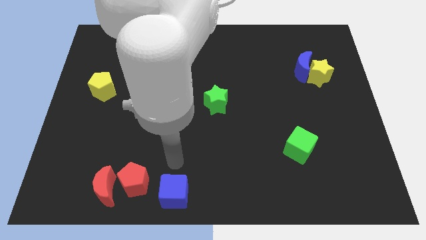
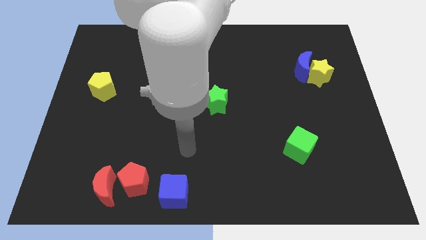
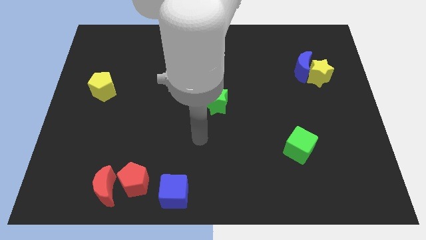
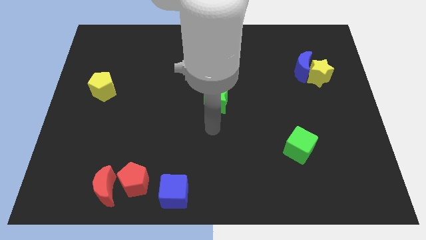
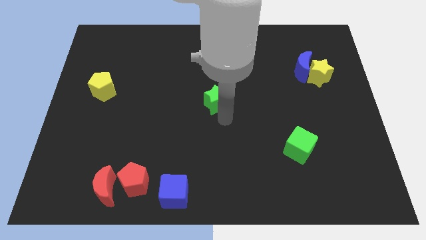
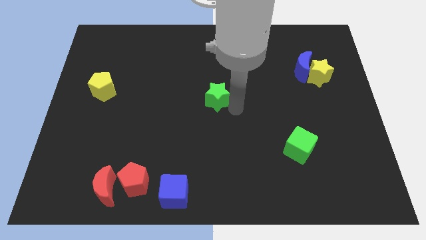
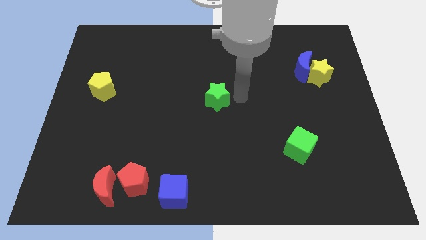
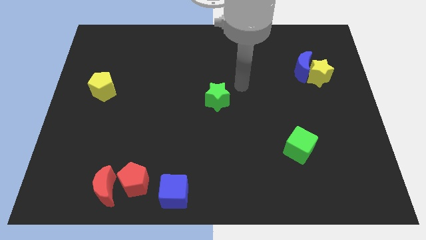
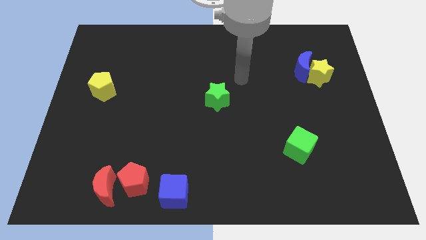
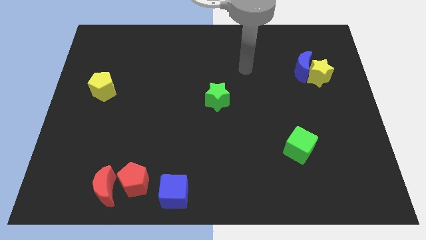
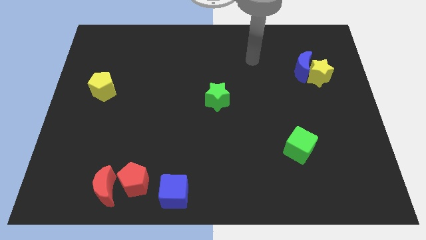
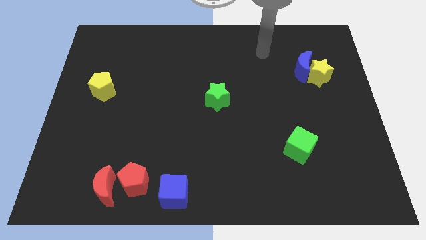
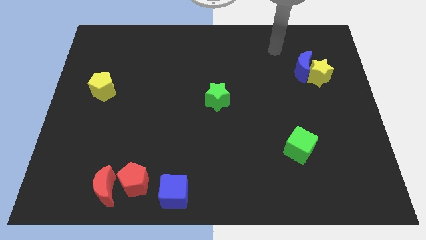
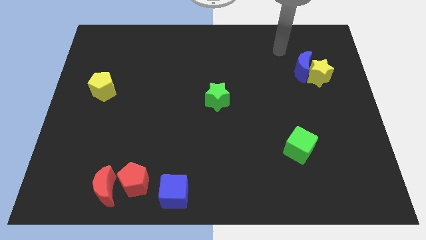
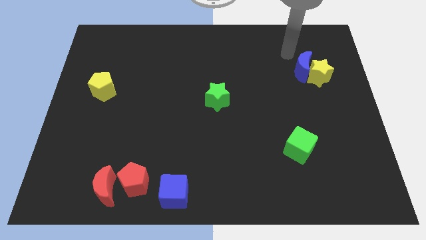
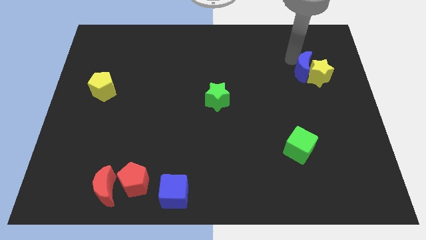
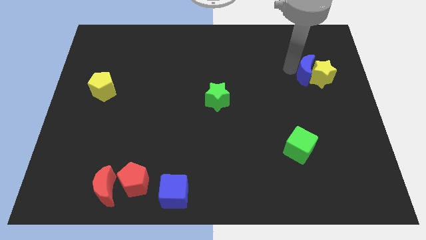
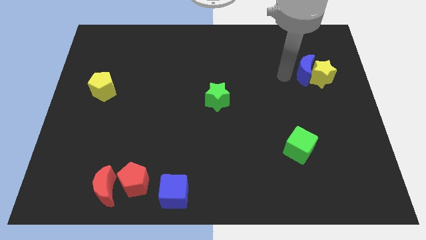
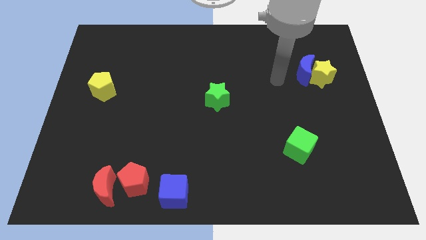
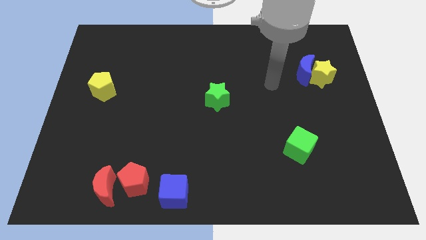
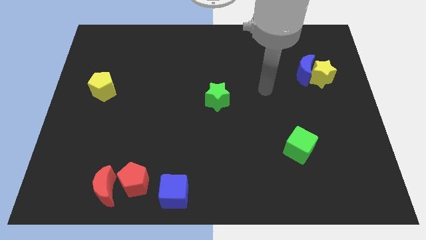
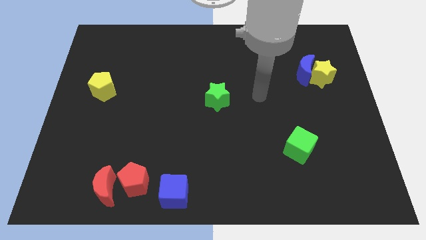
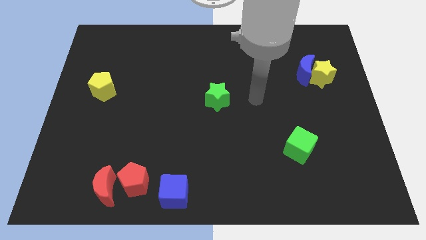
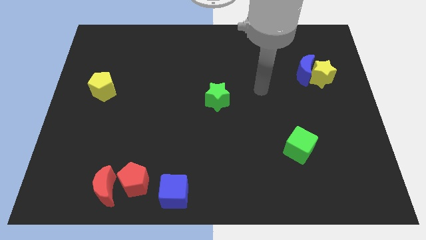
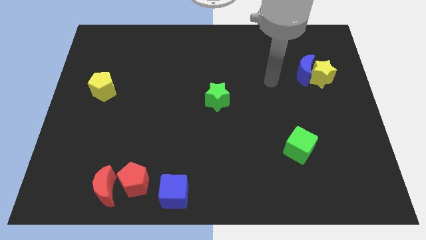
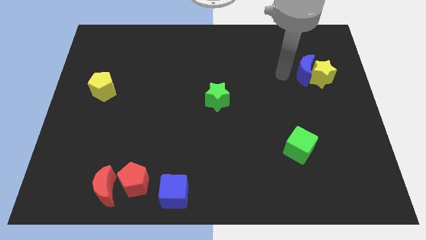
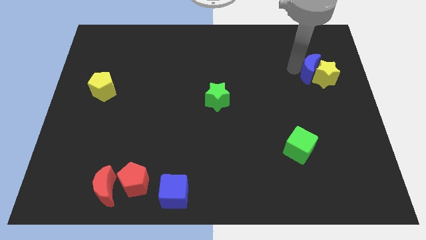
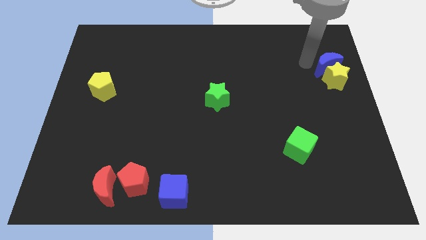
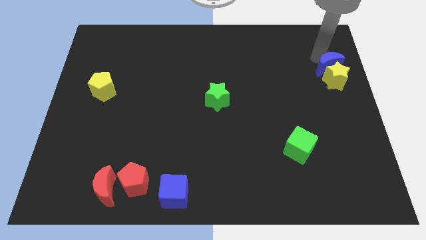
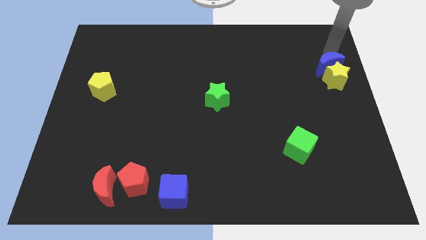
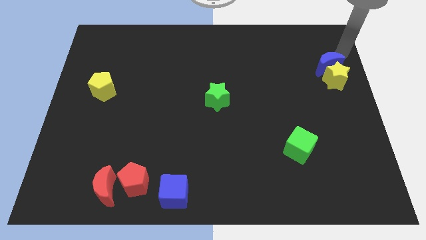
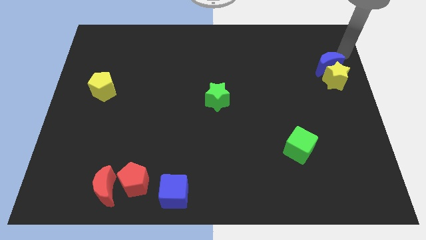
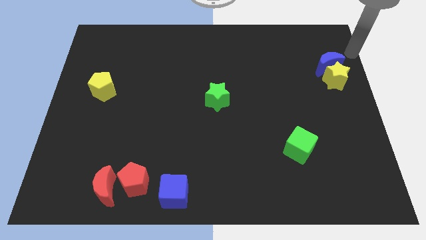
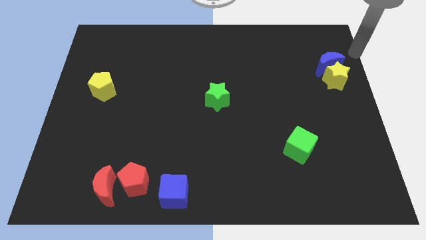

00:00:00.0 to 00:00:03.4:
slide the blue moon to the top side of the yellow star

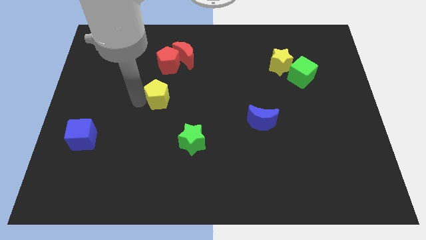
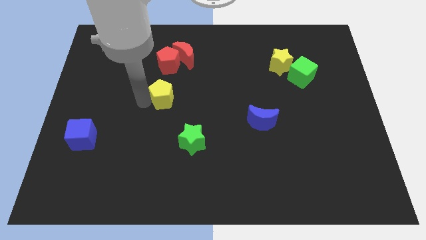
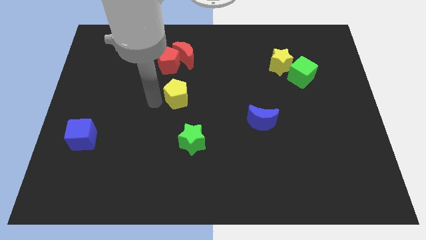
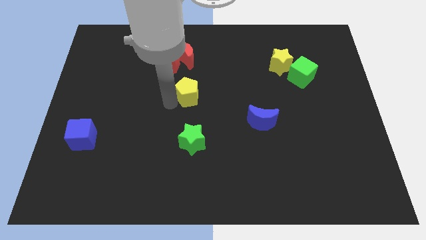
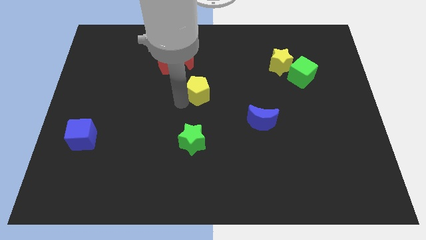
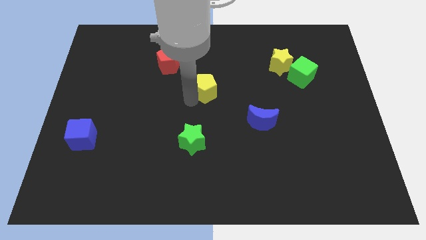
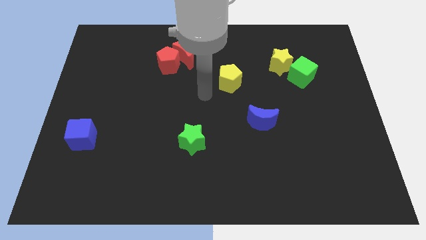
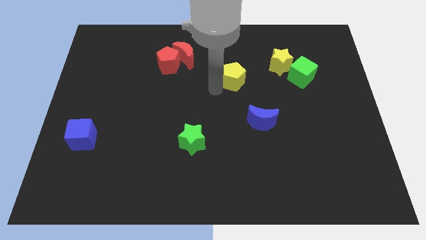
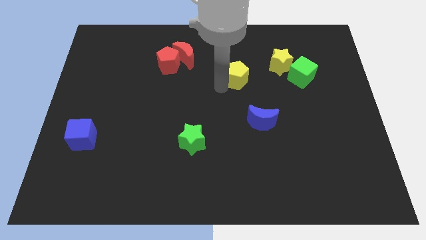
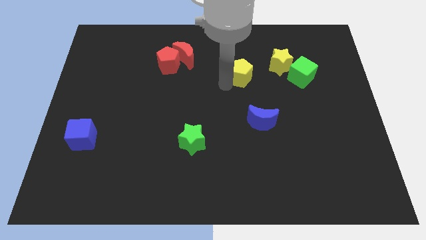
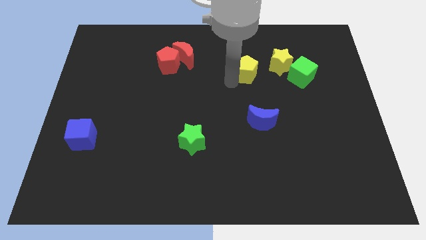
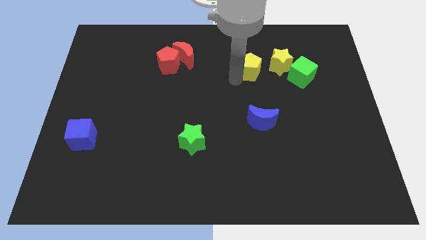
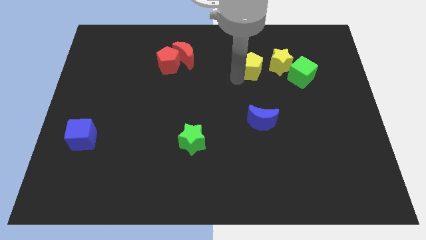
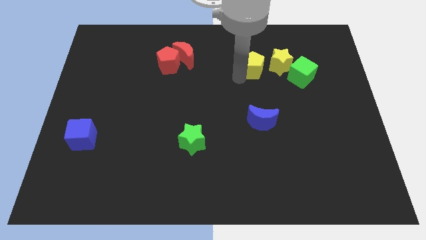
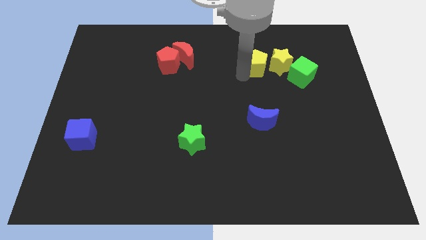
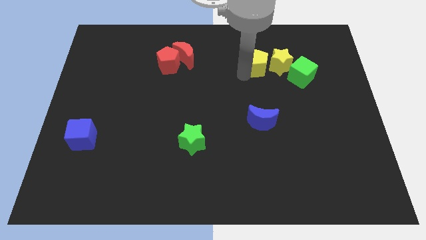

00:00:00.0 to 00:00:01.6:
move the yellow pentagon to the left of the yellow star

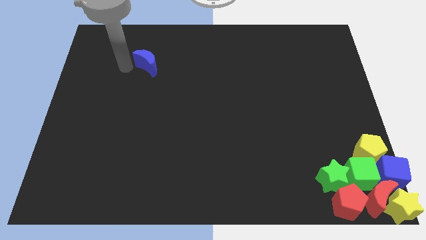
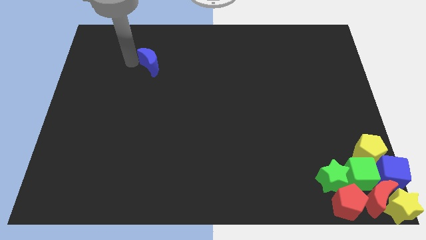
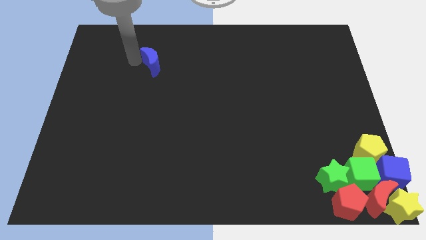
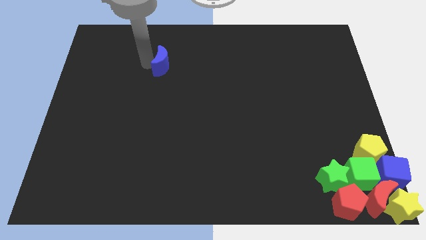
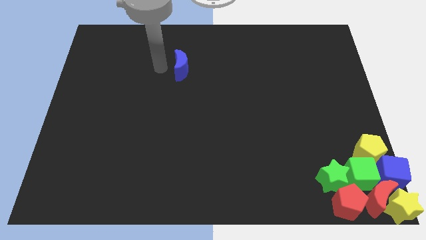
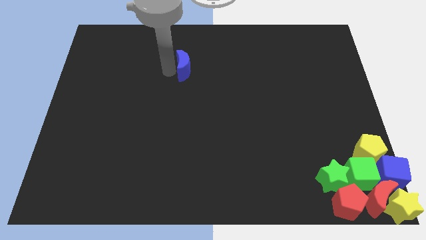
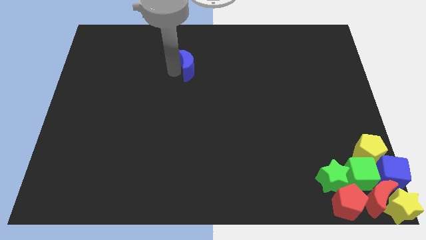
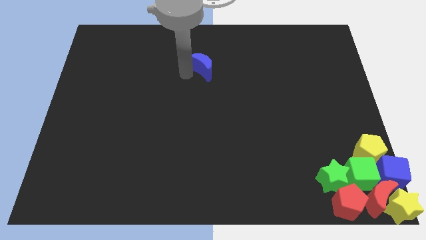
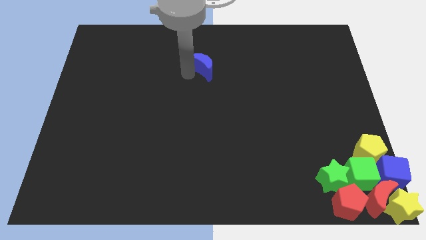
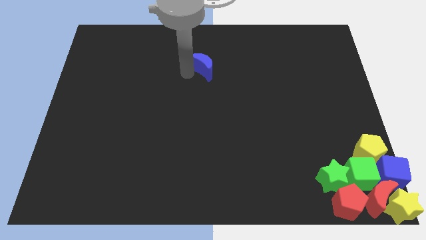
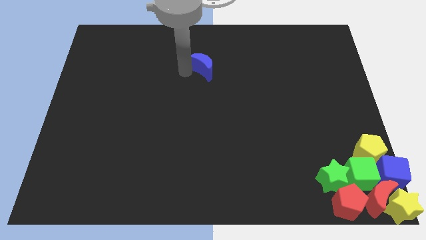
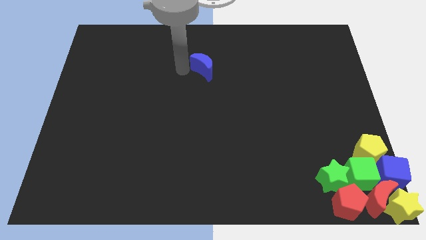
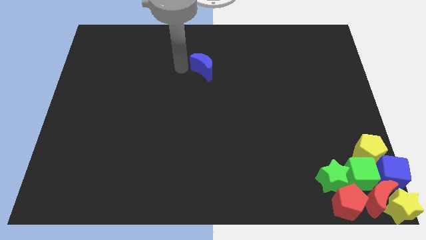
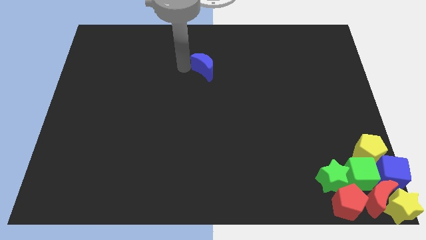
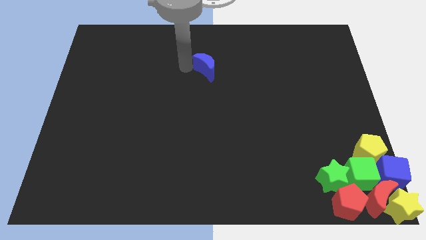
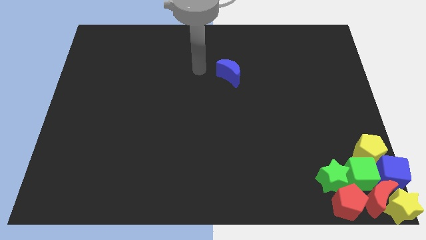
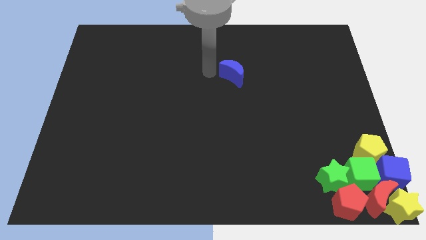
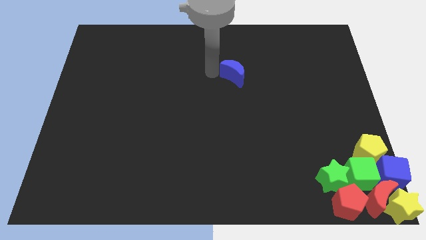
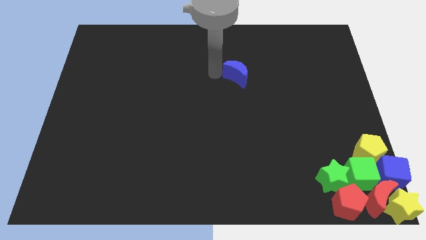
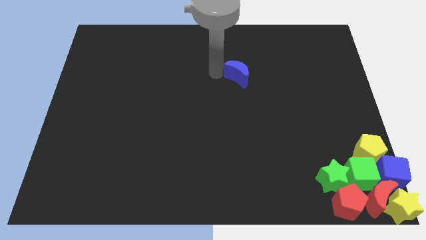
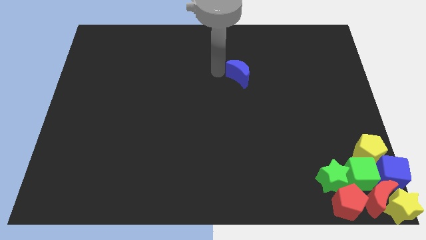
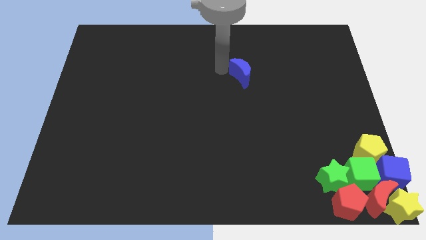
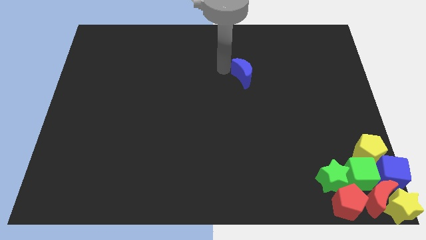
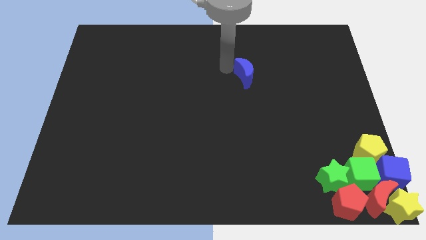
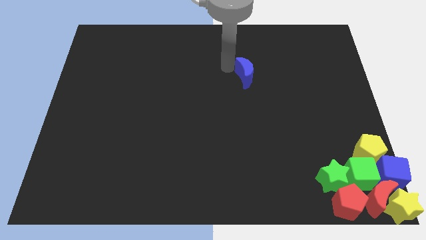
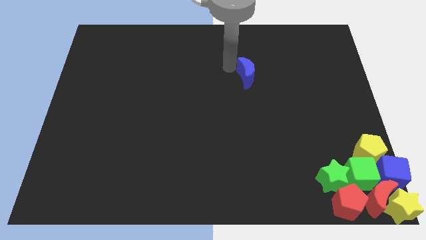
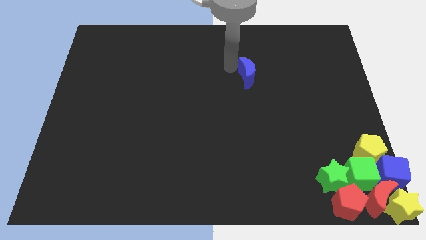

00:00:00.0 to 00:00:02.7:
push blue crescent towards right side

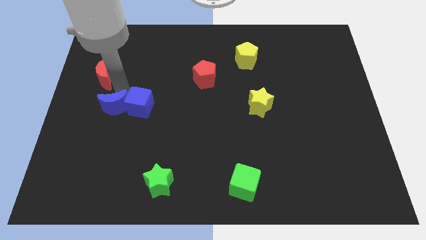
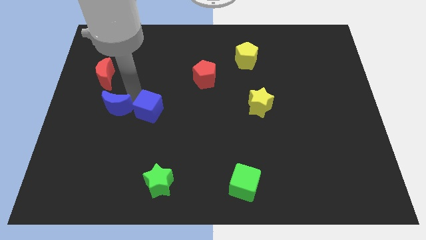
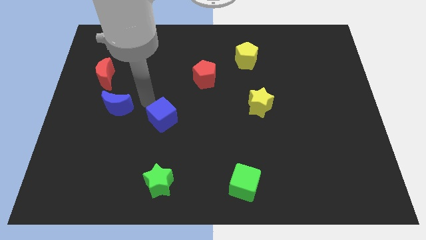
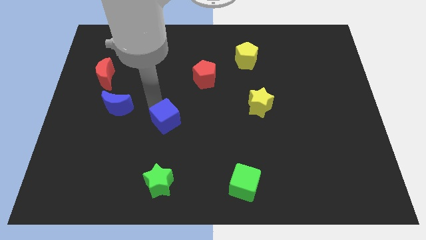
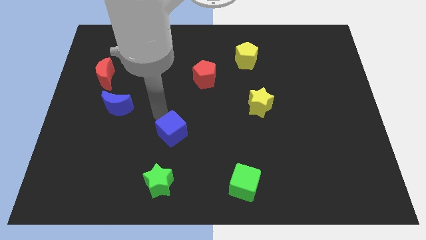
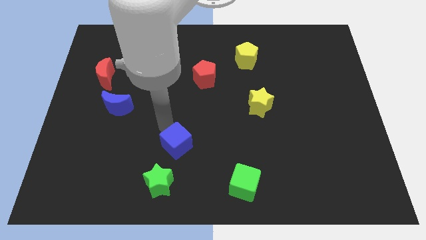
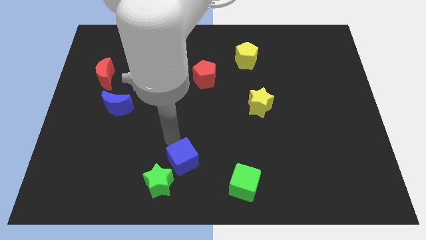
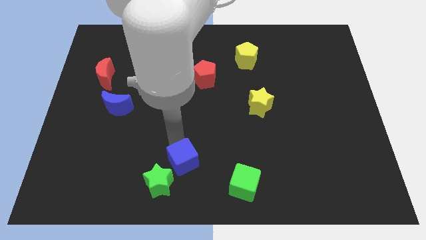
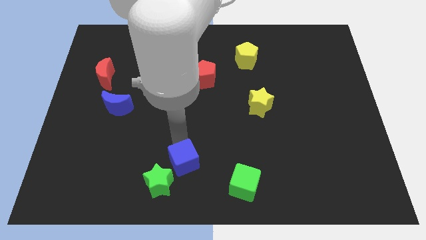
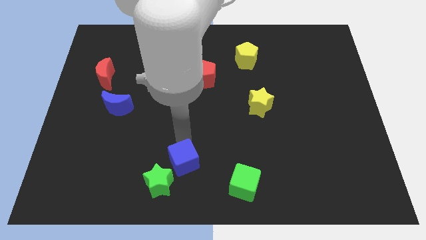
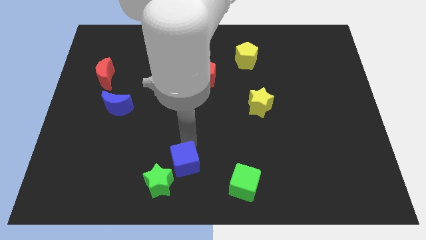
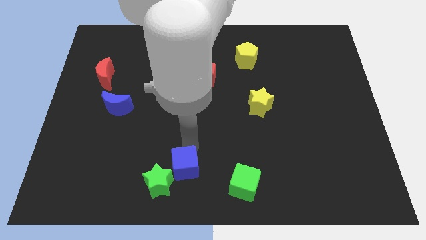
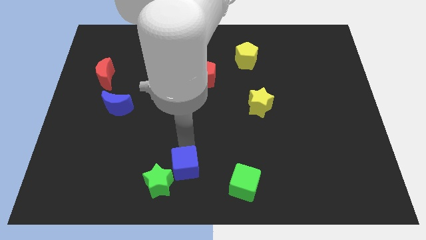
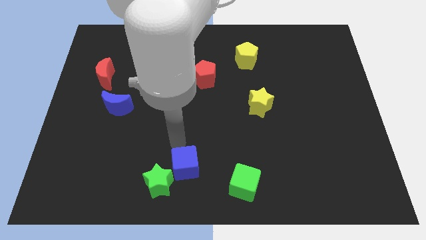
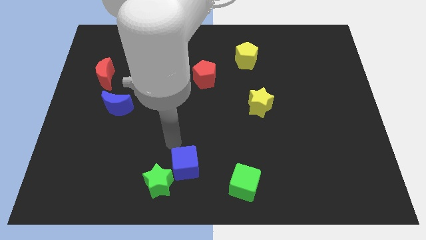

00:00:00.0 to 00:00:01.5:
move the blue cube to the top right of the green star
